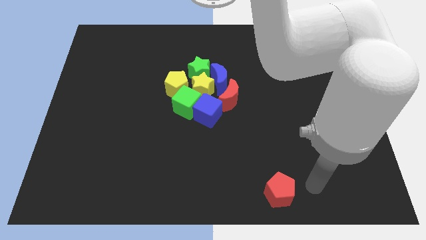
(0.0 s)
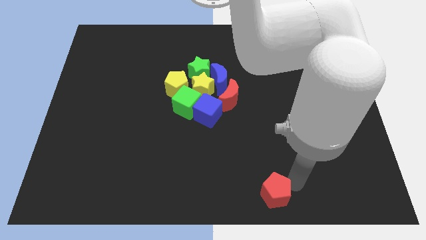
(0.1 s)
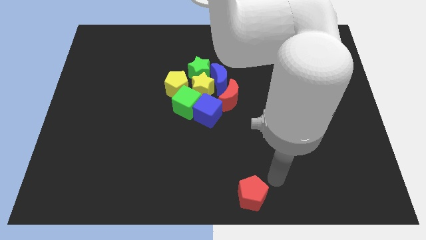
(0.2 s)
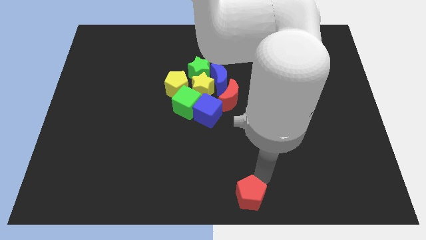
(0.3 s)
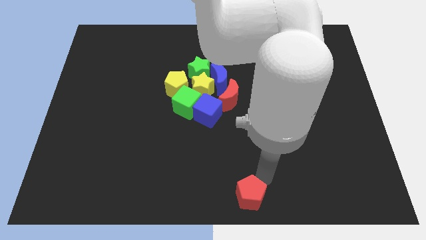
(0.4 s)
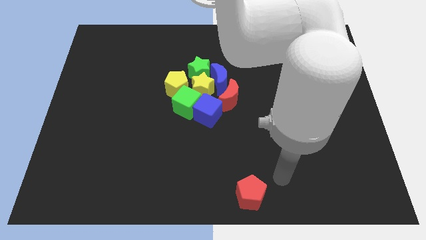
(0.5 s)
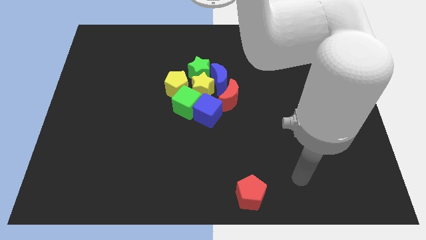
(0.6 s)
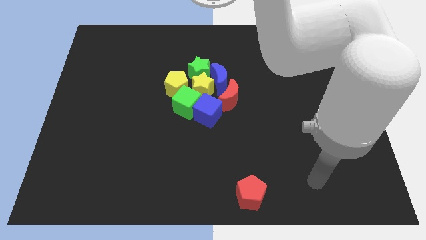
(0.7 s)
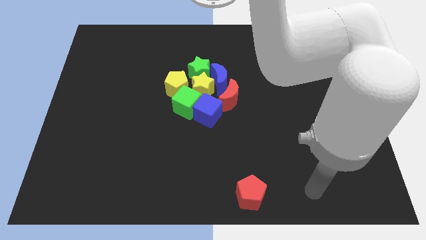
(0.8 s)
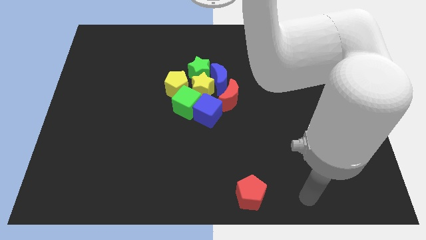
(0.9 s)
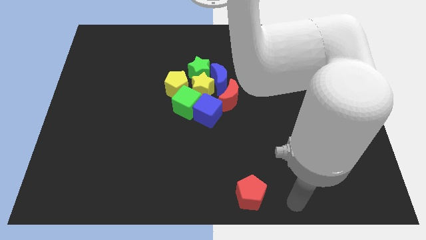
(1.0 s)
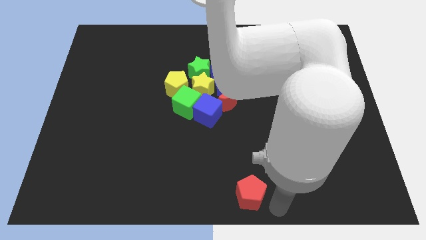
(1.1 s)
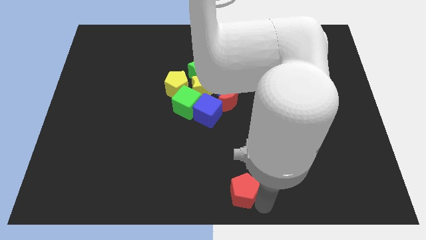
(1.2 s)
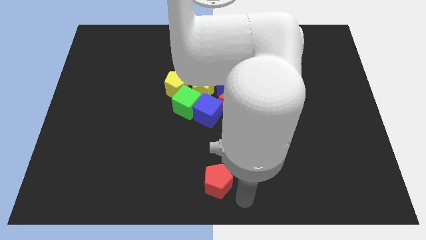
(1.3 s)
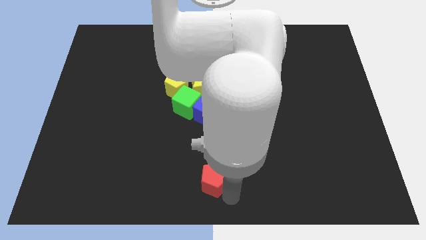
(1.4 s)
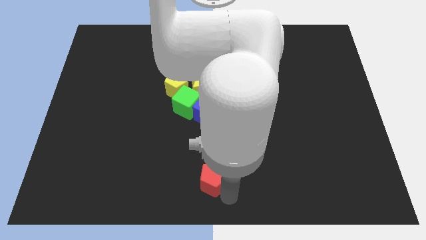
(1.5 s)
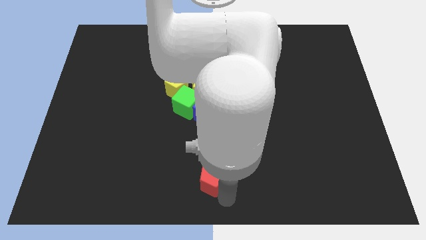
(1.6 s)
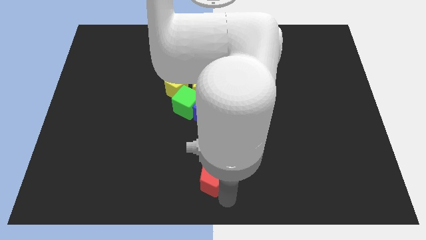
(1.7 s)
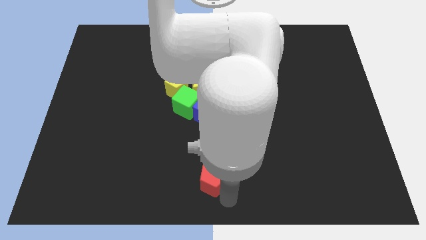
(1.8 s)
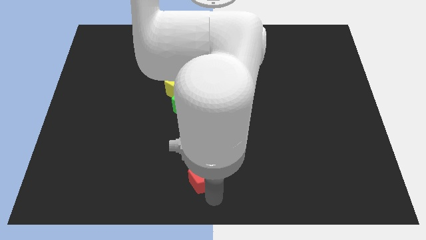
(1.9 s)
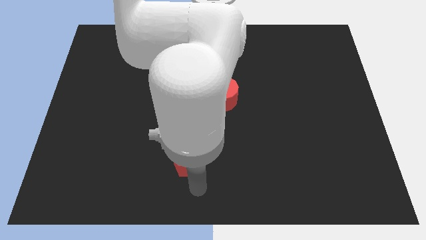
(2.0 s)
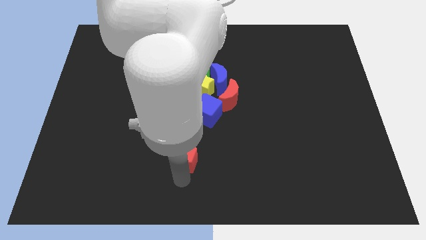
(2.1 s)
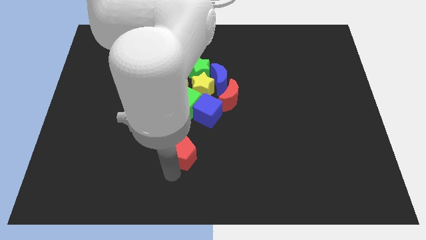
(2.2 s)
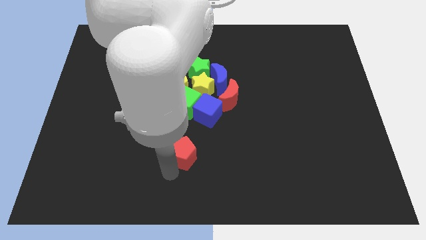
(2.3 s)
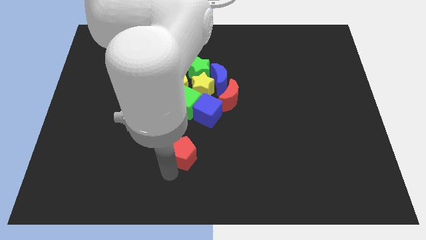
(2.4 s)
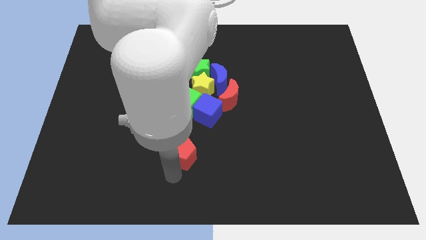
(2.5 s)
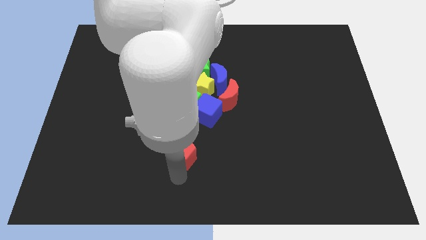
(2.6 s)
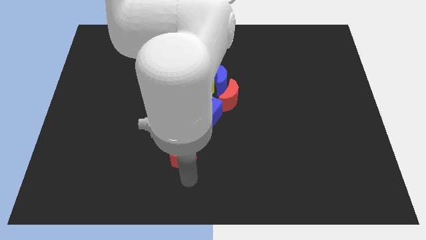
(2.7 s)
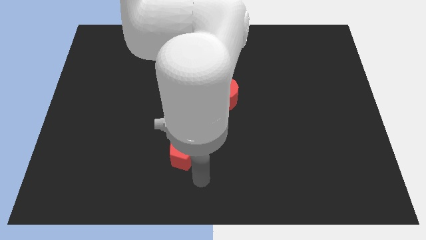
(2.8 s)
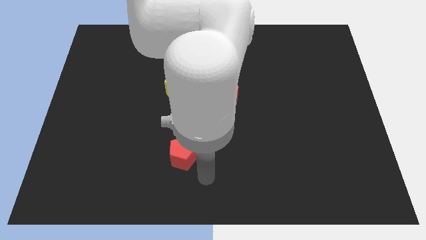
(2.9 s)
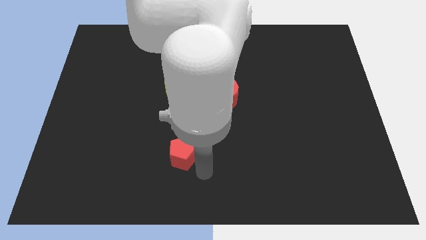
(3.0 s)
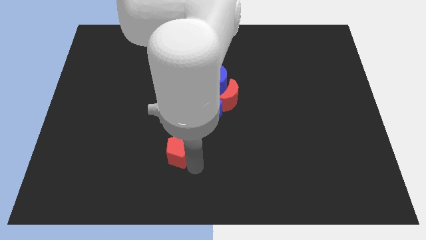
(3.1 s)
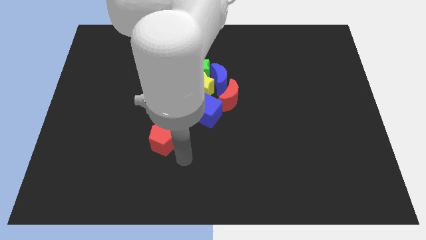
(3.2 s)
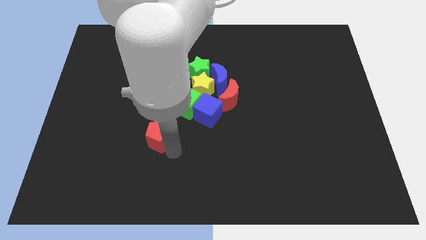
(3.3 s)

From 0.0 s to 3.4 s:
push red pentagon upwards

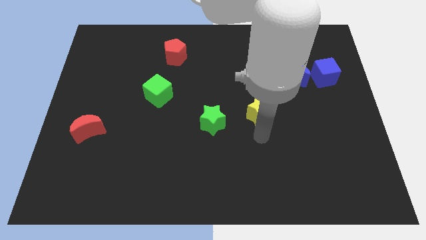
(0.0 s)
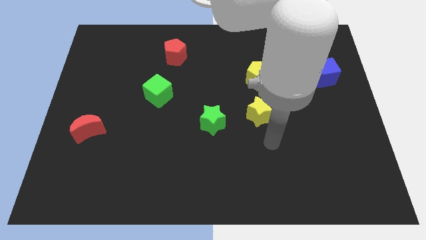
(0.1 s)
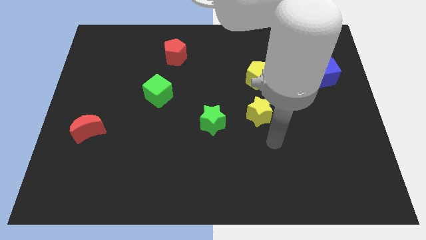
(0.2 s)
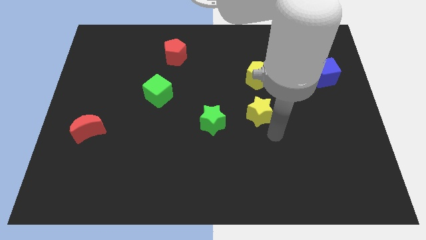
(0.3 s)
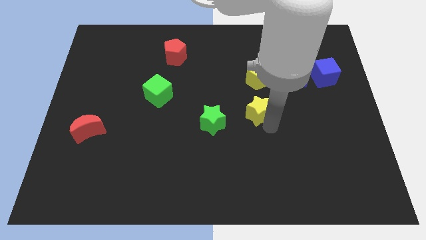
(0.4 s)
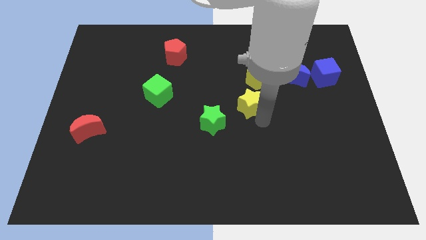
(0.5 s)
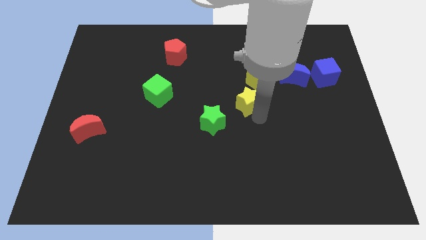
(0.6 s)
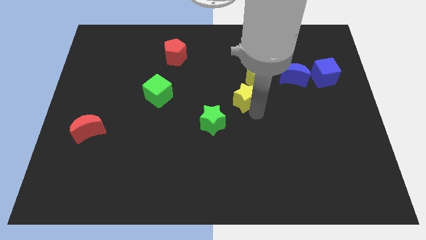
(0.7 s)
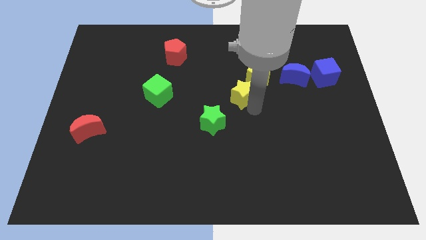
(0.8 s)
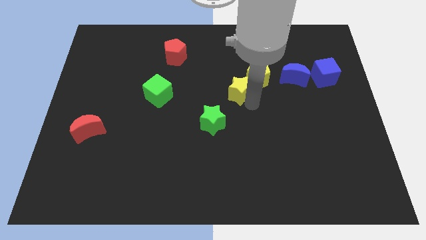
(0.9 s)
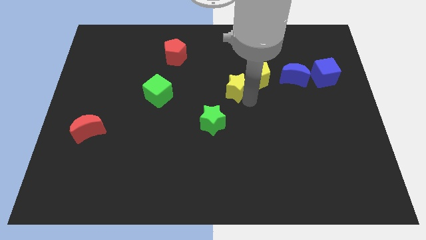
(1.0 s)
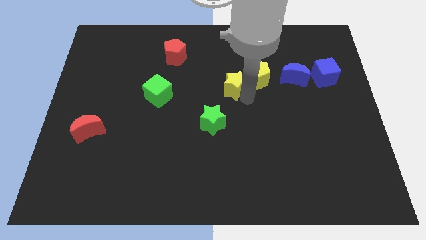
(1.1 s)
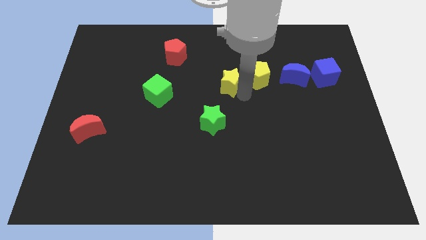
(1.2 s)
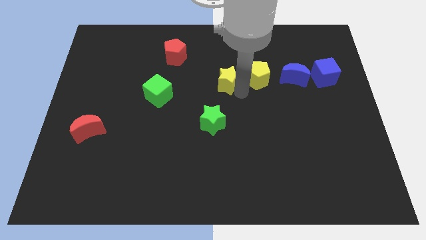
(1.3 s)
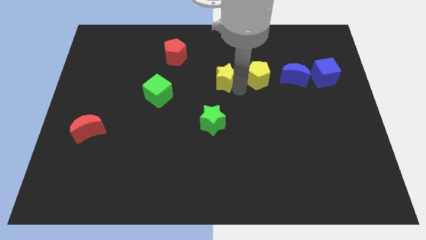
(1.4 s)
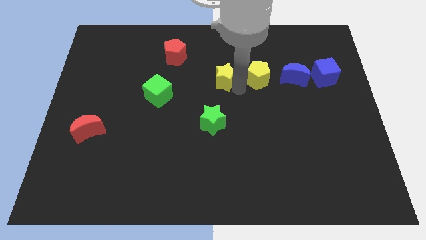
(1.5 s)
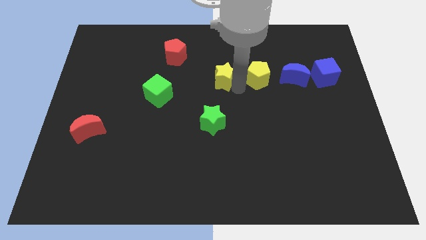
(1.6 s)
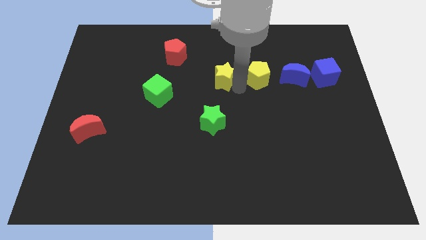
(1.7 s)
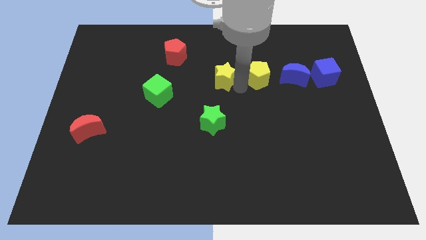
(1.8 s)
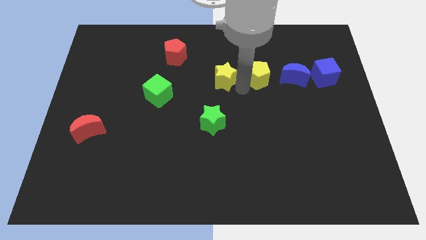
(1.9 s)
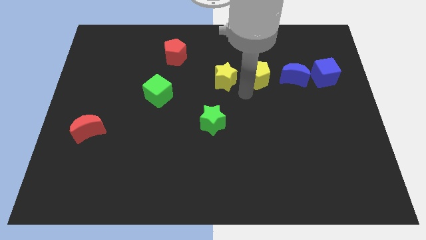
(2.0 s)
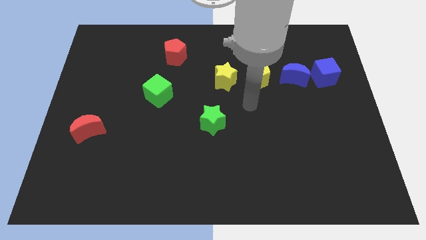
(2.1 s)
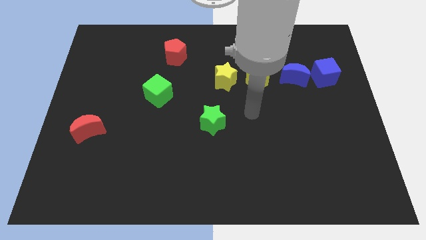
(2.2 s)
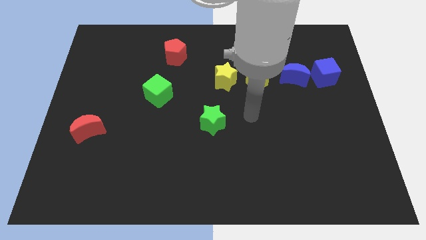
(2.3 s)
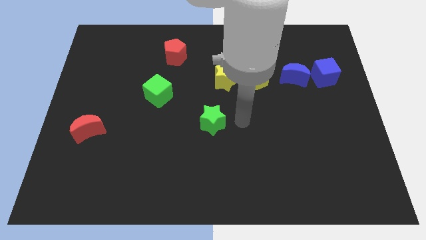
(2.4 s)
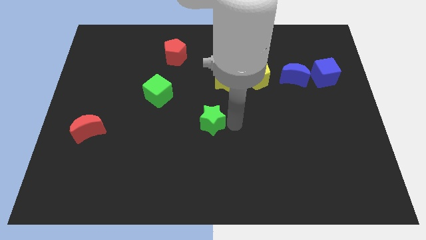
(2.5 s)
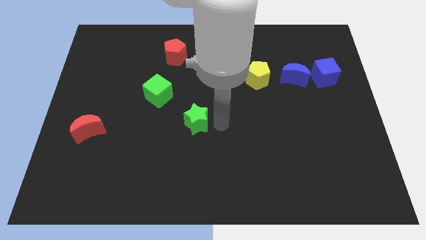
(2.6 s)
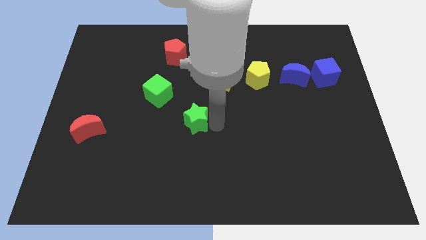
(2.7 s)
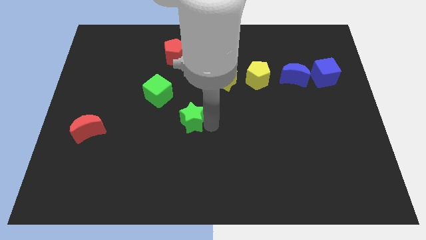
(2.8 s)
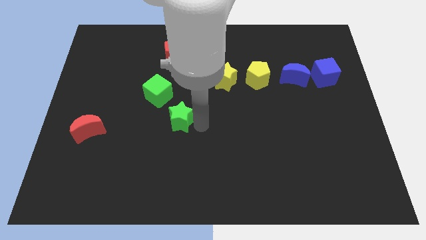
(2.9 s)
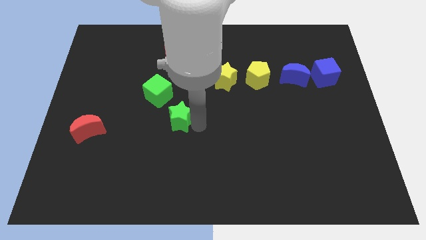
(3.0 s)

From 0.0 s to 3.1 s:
plush green star below red pentagon

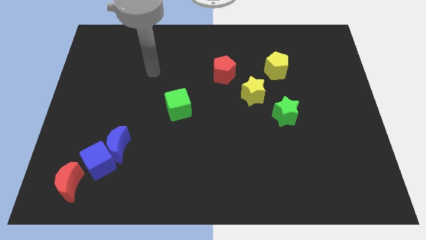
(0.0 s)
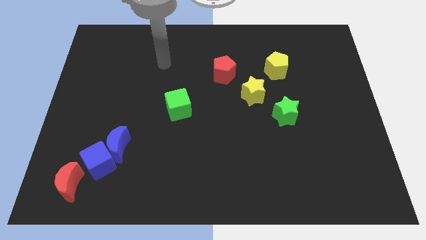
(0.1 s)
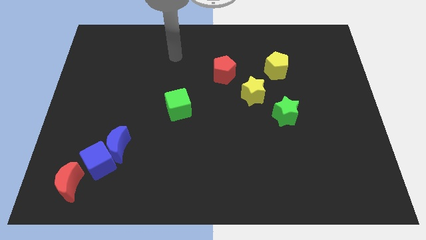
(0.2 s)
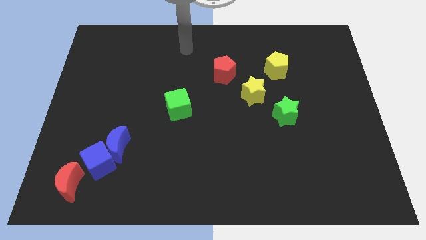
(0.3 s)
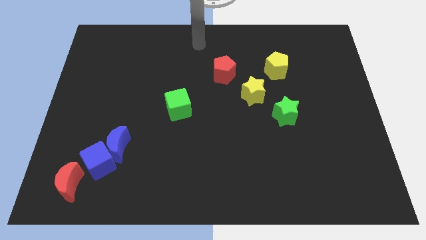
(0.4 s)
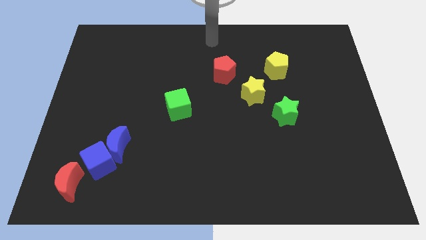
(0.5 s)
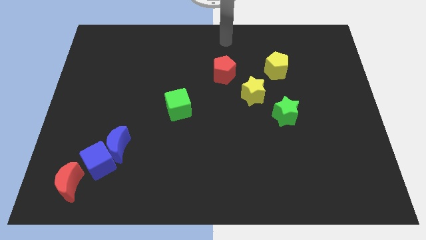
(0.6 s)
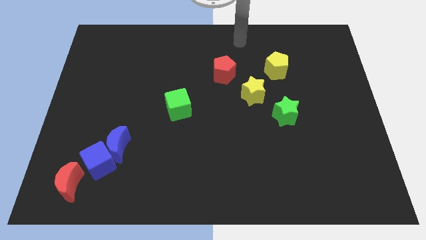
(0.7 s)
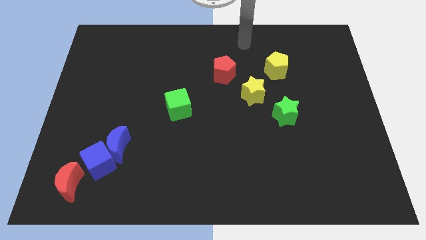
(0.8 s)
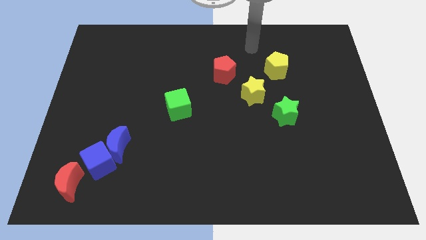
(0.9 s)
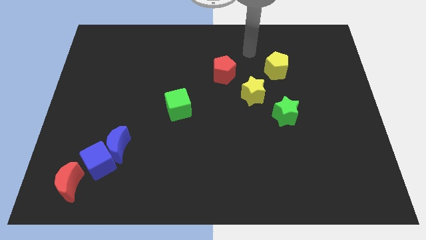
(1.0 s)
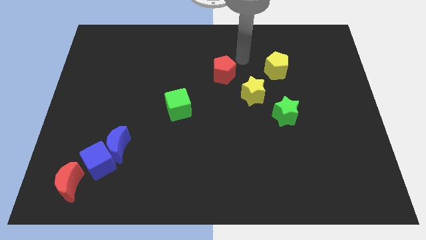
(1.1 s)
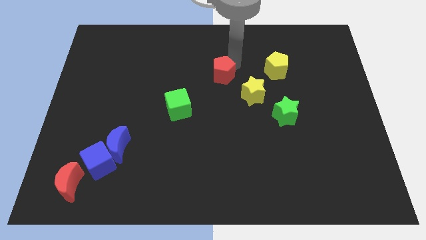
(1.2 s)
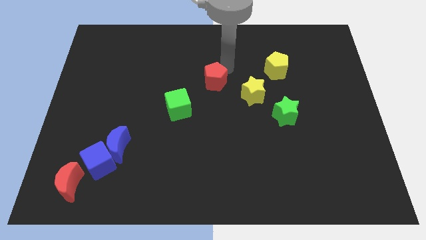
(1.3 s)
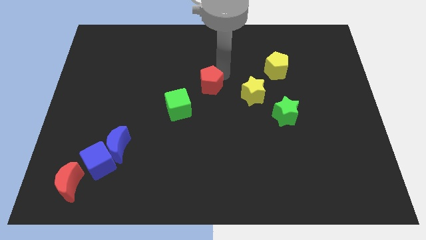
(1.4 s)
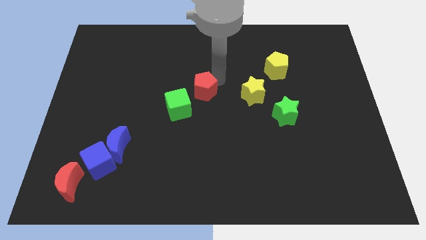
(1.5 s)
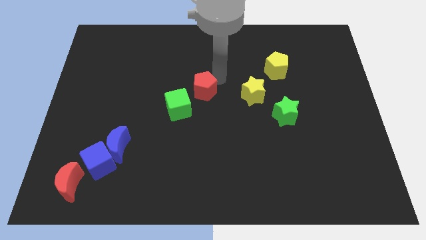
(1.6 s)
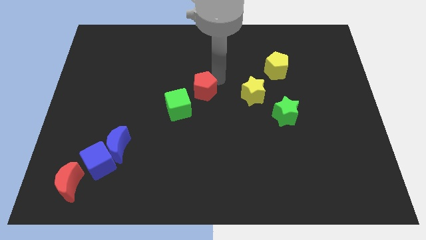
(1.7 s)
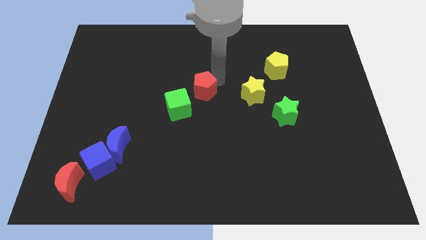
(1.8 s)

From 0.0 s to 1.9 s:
drag the red pentagon towards the green cube

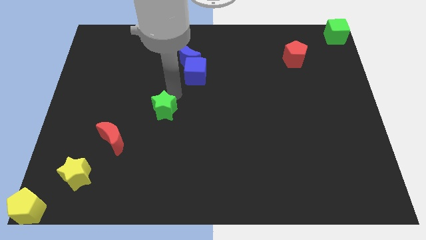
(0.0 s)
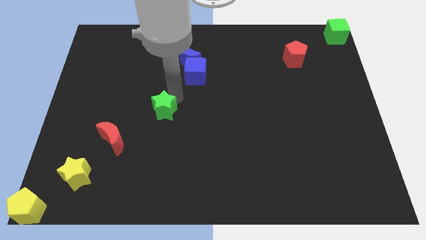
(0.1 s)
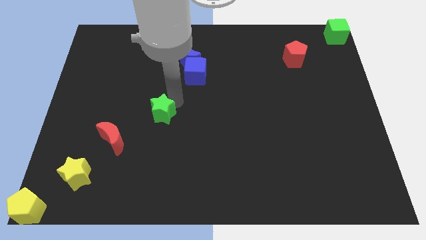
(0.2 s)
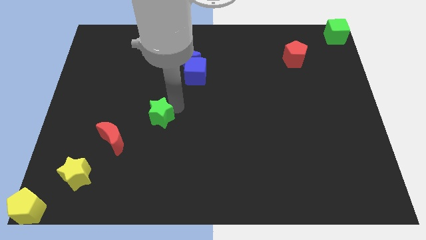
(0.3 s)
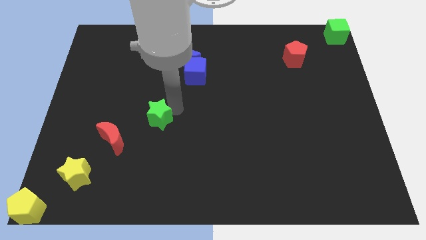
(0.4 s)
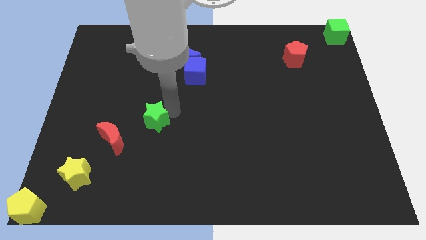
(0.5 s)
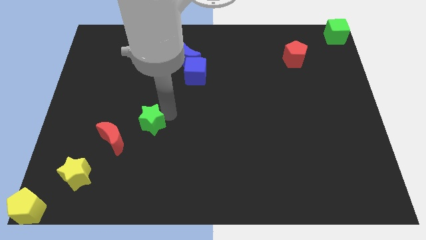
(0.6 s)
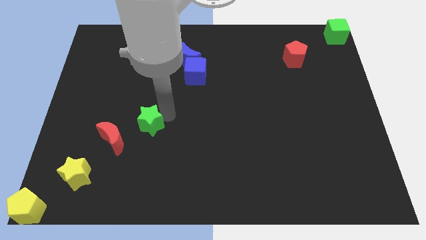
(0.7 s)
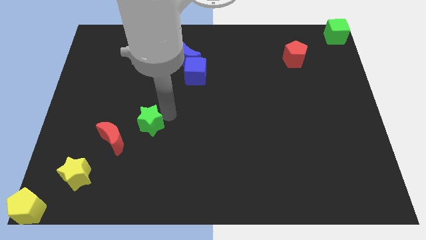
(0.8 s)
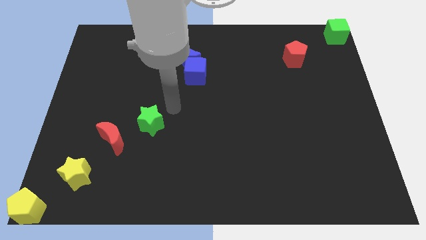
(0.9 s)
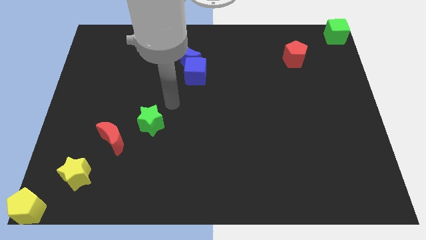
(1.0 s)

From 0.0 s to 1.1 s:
move the green star diagonally to the red moon
